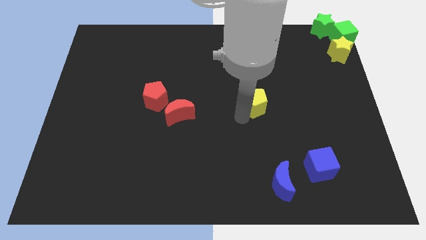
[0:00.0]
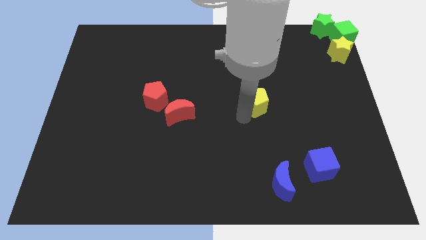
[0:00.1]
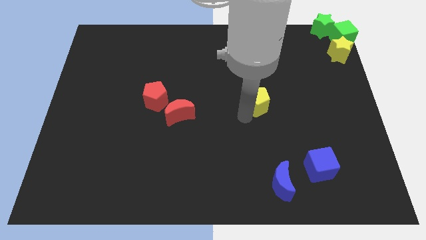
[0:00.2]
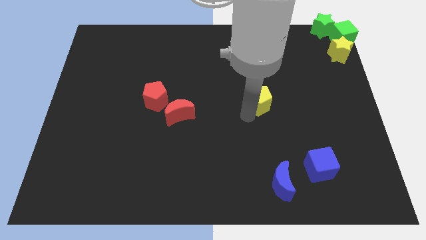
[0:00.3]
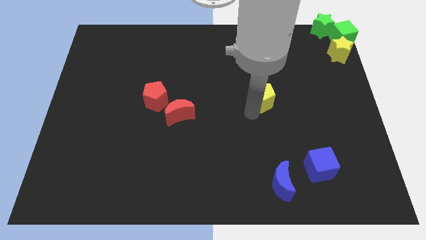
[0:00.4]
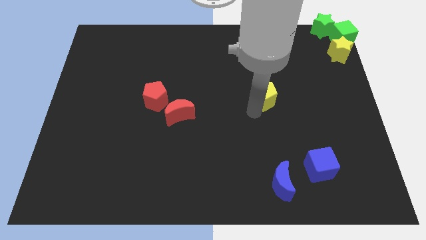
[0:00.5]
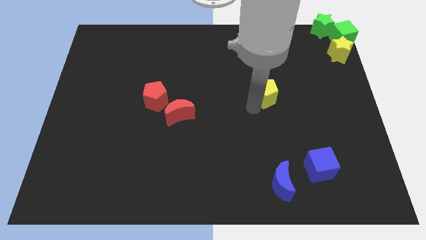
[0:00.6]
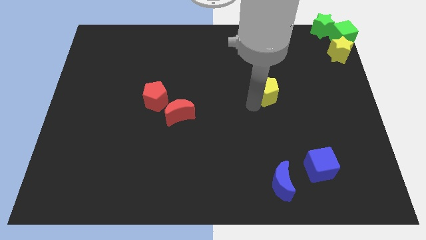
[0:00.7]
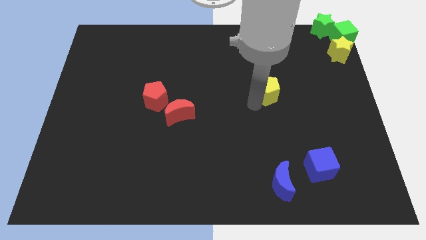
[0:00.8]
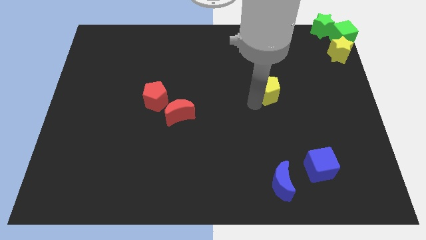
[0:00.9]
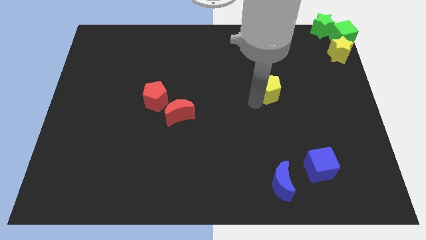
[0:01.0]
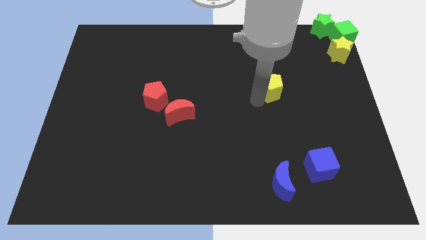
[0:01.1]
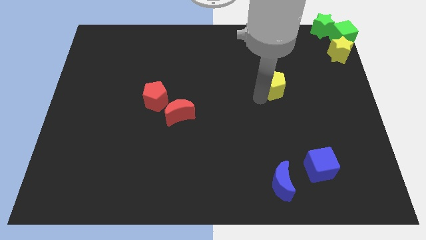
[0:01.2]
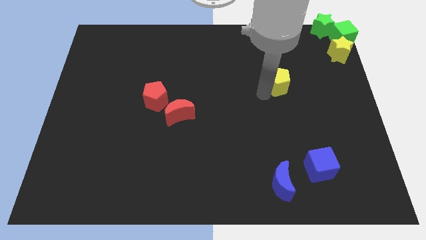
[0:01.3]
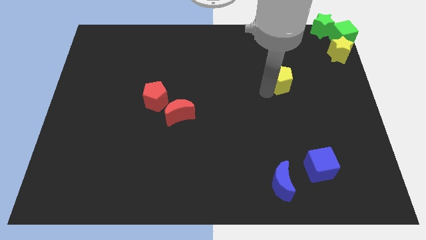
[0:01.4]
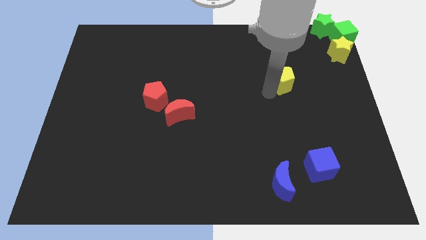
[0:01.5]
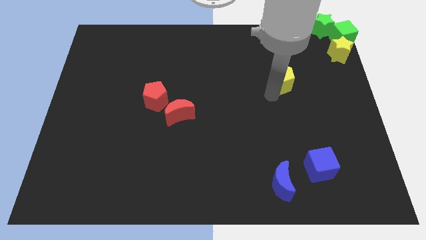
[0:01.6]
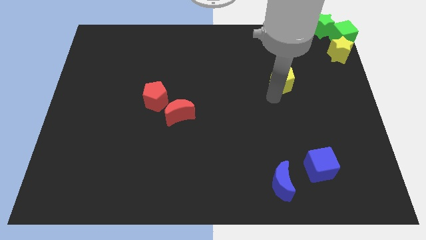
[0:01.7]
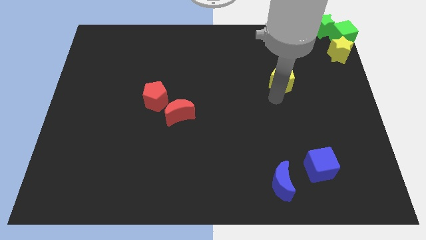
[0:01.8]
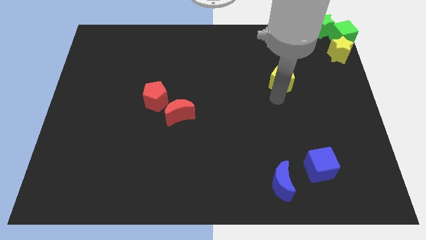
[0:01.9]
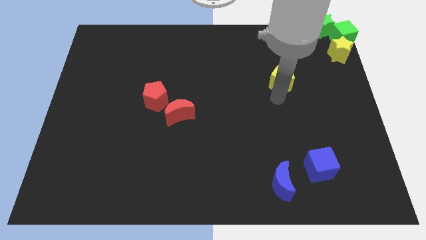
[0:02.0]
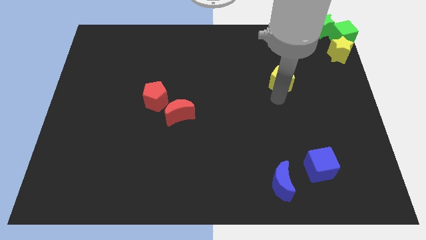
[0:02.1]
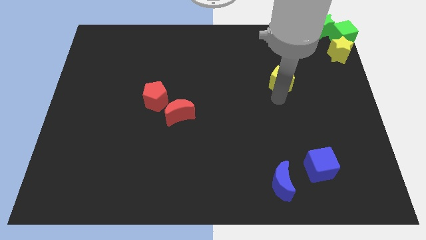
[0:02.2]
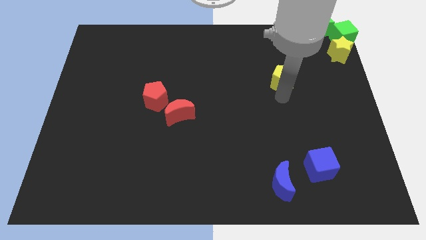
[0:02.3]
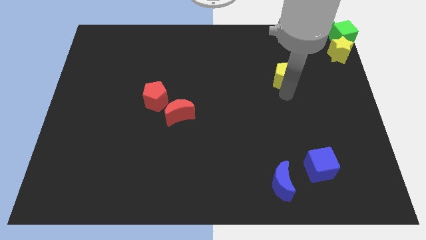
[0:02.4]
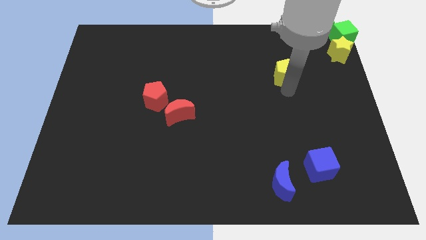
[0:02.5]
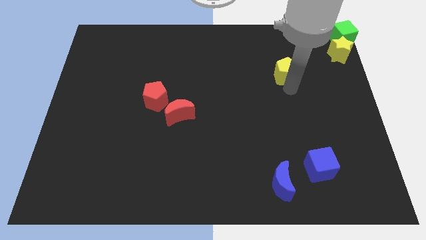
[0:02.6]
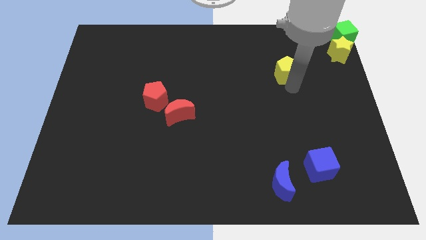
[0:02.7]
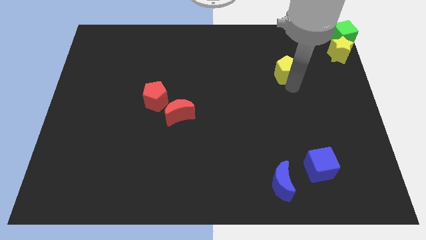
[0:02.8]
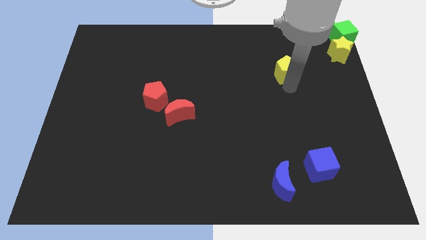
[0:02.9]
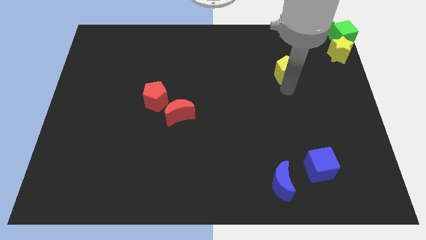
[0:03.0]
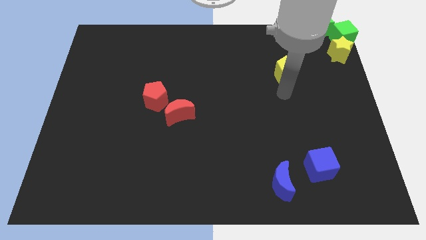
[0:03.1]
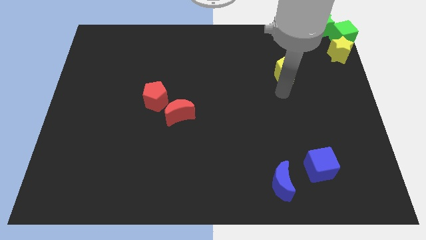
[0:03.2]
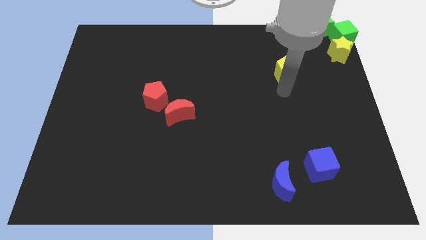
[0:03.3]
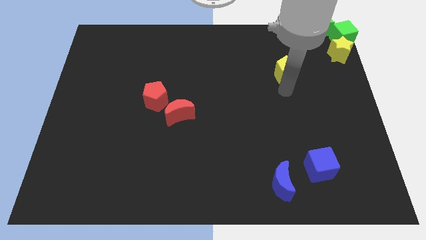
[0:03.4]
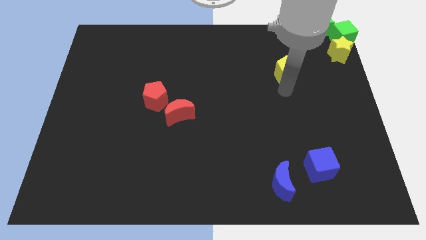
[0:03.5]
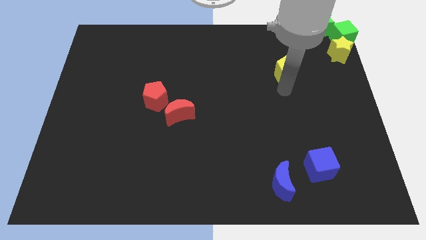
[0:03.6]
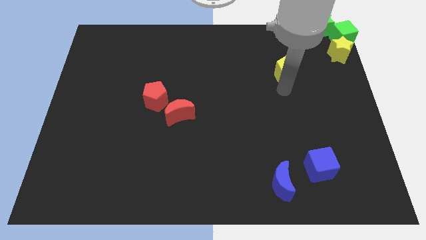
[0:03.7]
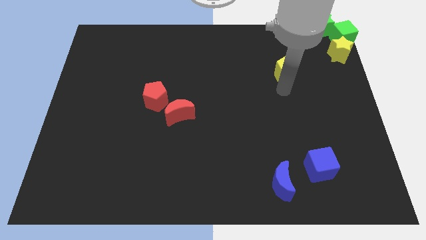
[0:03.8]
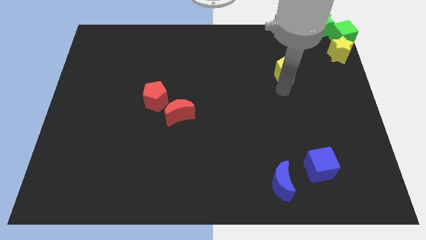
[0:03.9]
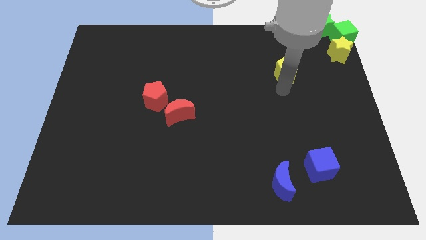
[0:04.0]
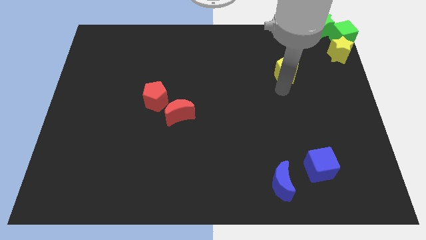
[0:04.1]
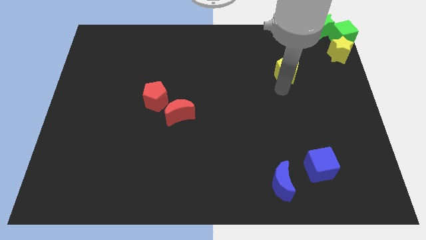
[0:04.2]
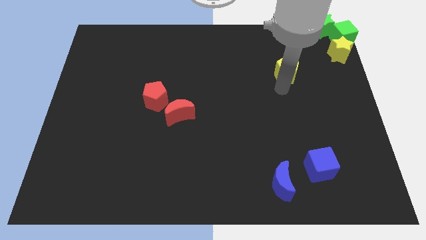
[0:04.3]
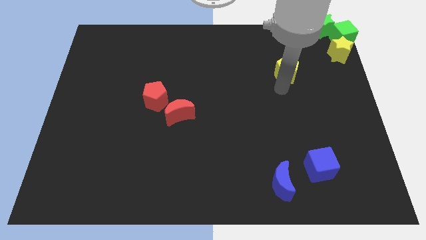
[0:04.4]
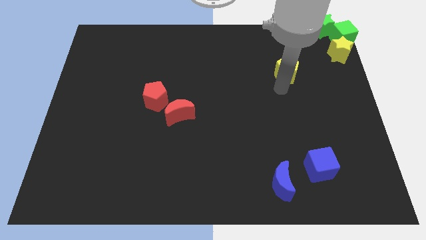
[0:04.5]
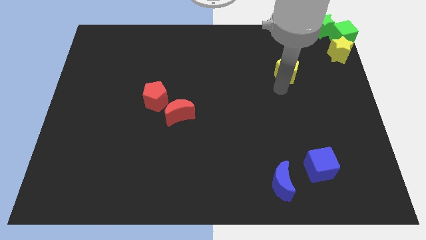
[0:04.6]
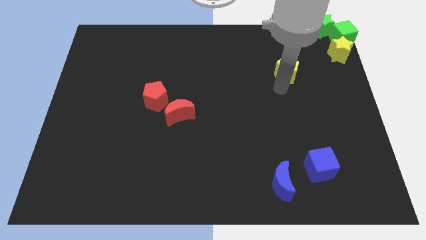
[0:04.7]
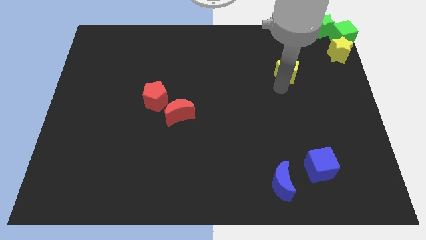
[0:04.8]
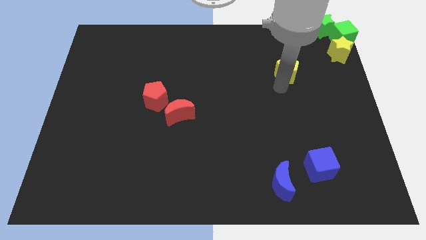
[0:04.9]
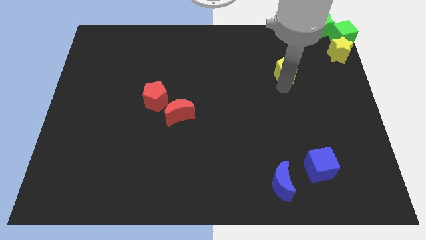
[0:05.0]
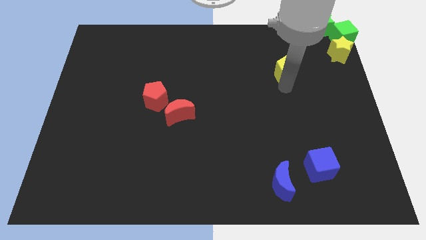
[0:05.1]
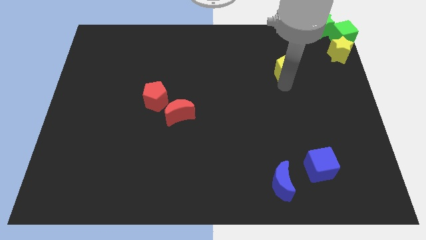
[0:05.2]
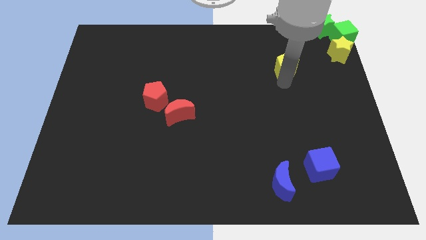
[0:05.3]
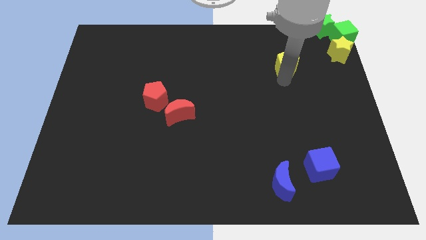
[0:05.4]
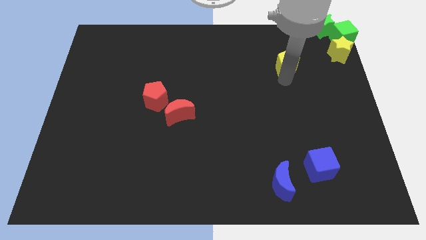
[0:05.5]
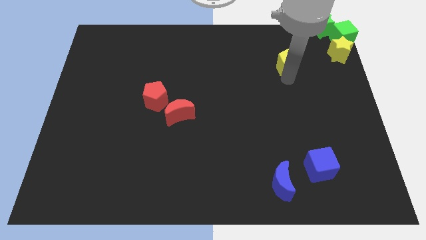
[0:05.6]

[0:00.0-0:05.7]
place the yellow pentagon above the blue cube

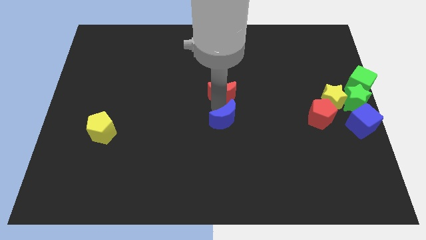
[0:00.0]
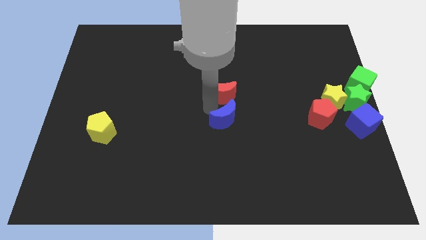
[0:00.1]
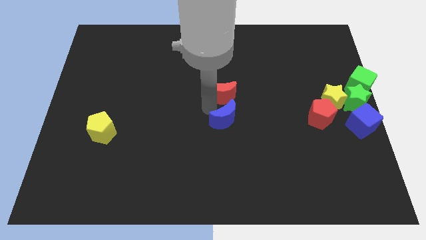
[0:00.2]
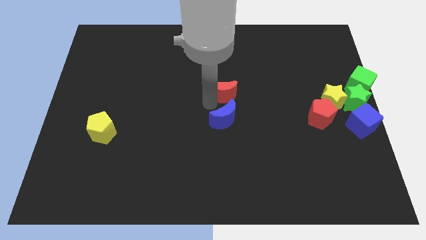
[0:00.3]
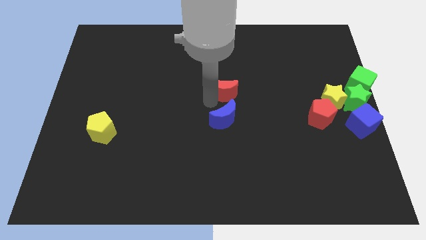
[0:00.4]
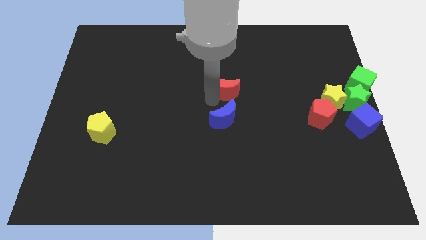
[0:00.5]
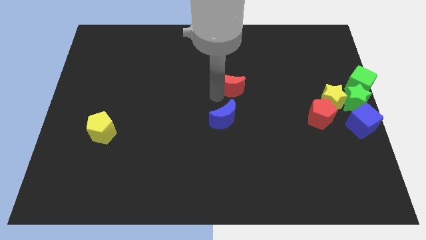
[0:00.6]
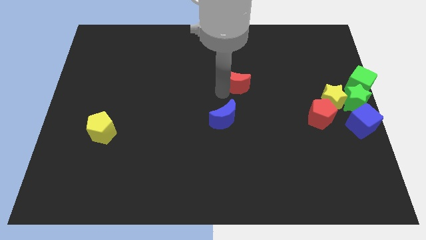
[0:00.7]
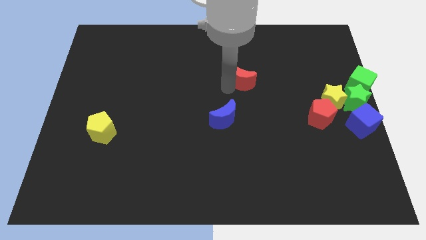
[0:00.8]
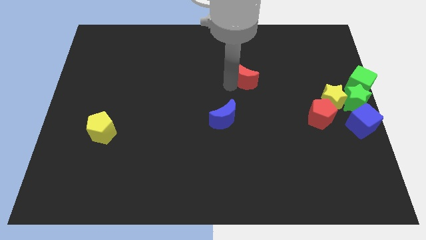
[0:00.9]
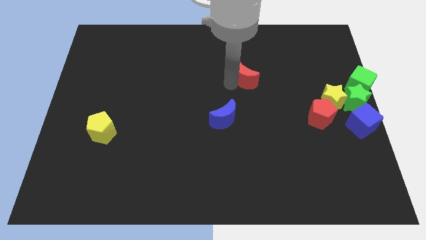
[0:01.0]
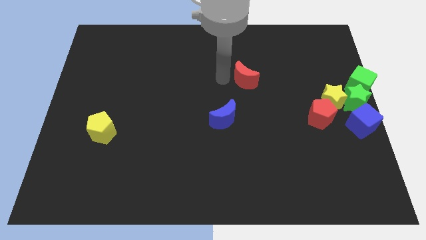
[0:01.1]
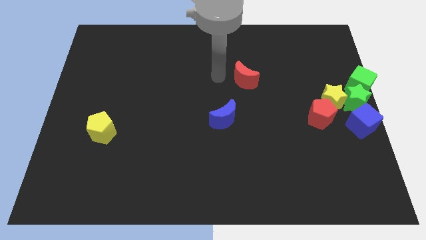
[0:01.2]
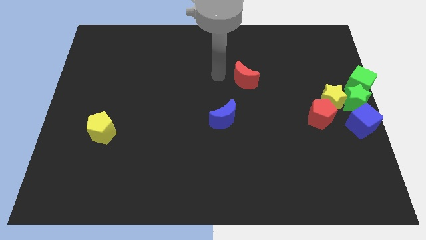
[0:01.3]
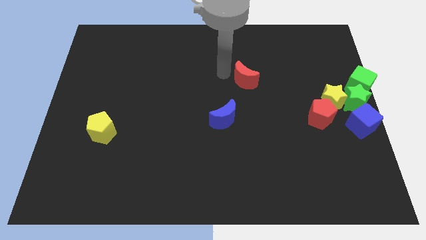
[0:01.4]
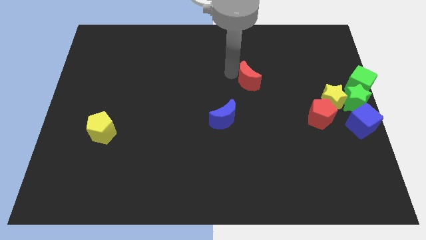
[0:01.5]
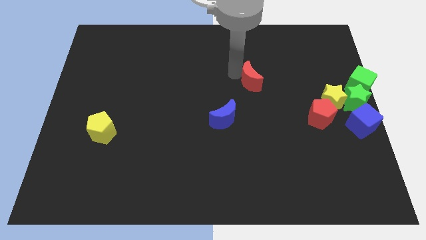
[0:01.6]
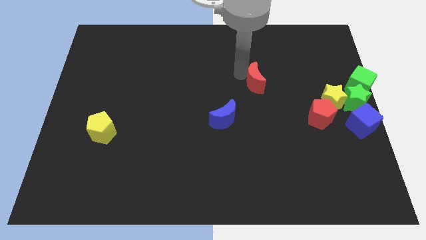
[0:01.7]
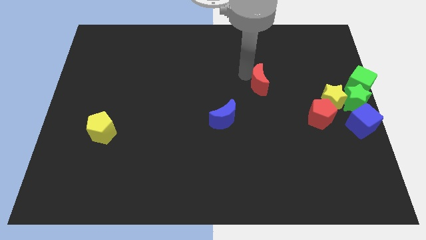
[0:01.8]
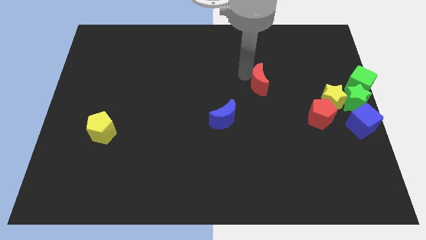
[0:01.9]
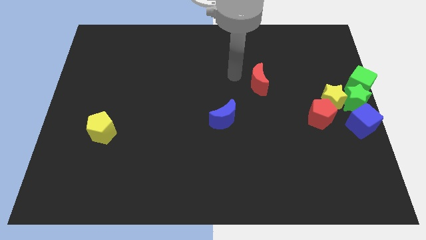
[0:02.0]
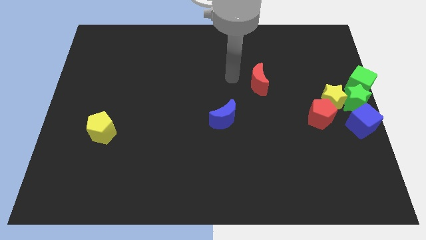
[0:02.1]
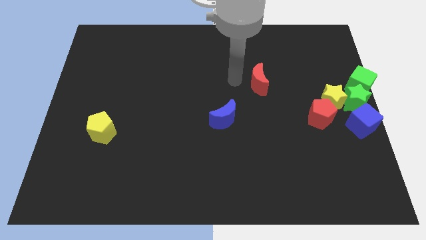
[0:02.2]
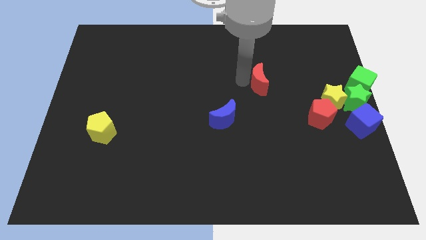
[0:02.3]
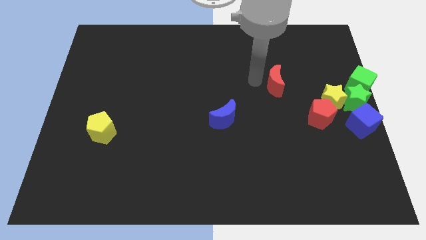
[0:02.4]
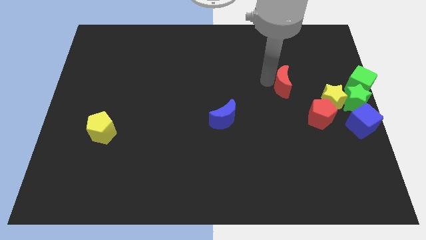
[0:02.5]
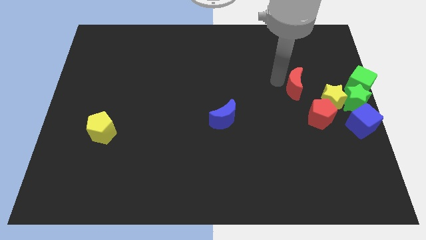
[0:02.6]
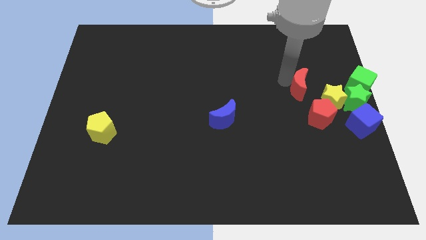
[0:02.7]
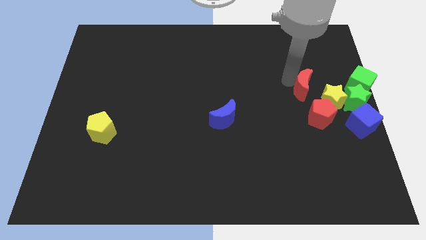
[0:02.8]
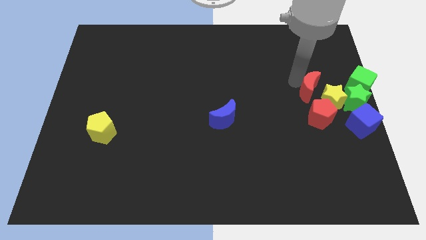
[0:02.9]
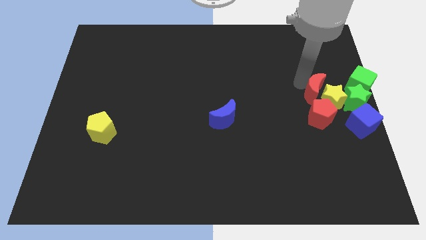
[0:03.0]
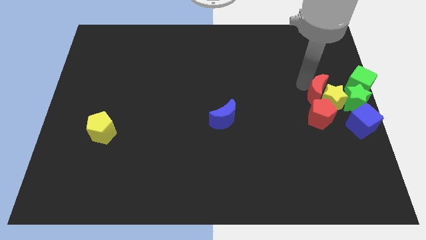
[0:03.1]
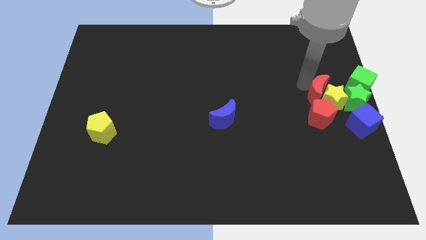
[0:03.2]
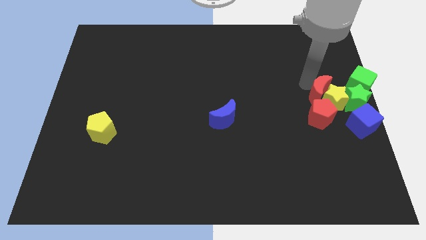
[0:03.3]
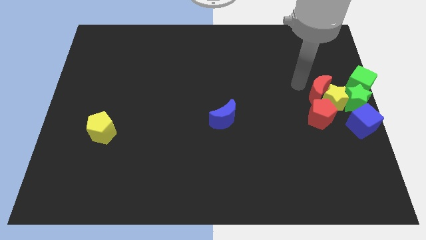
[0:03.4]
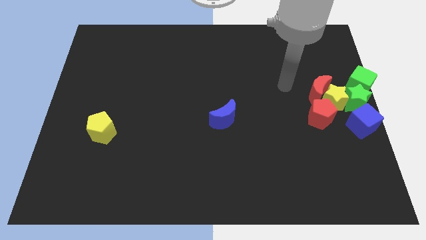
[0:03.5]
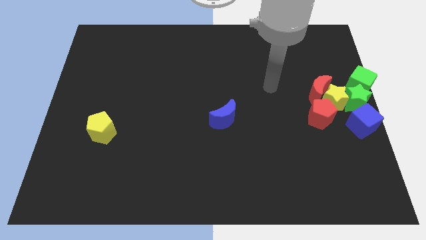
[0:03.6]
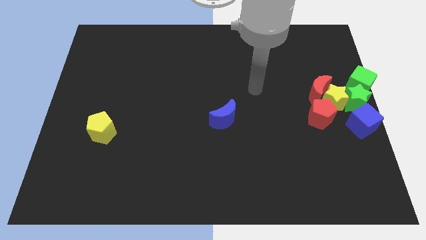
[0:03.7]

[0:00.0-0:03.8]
move the red crescent into the yellow star
